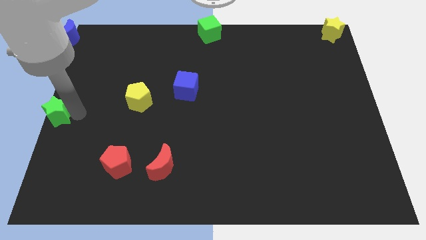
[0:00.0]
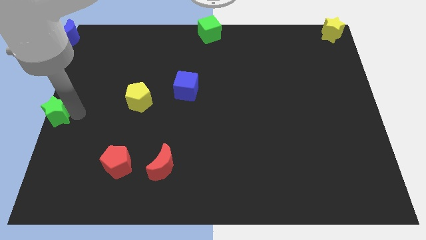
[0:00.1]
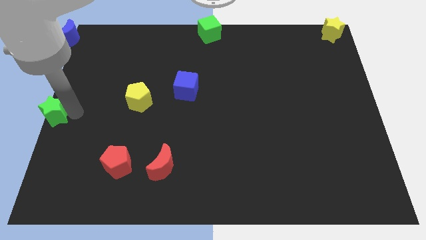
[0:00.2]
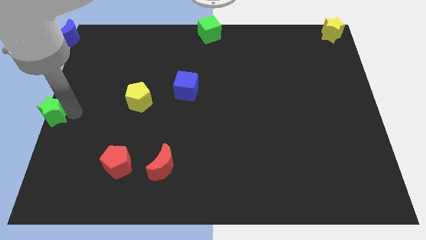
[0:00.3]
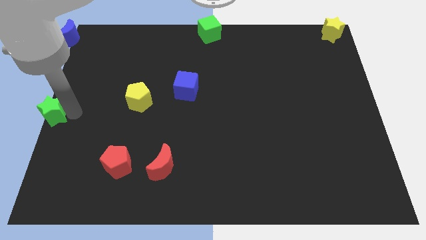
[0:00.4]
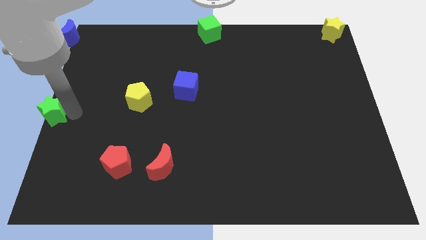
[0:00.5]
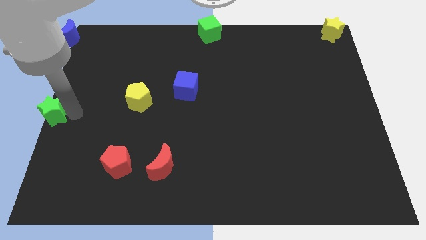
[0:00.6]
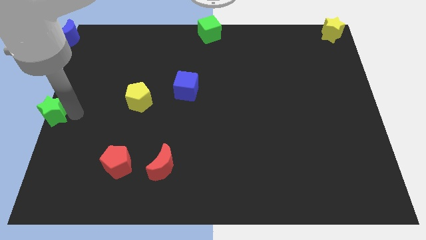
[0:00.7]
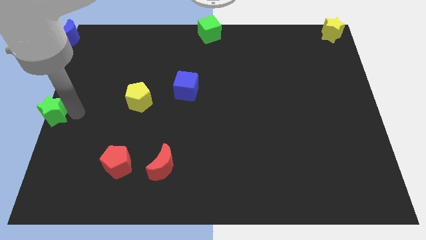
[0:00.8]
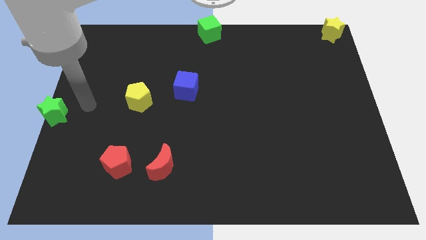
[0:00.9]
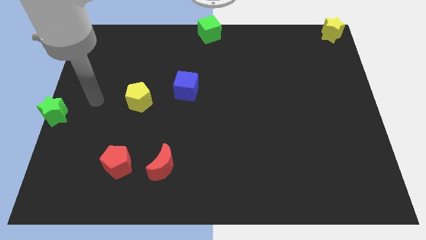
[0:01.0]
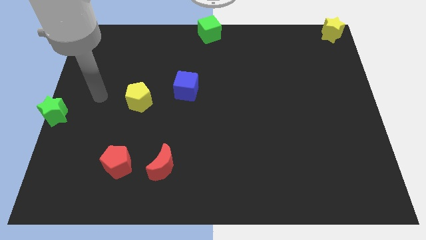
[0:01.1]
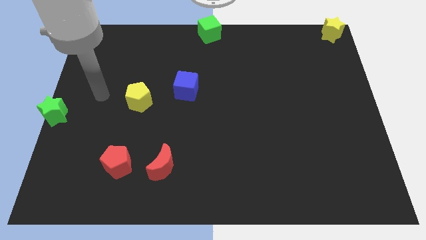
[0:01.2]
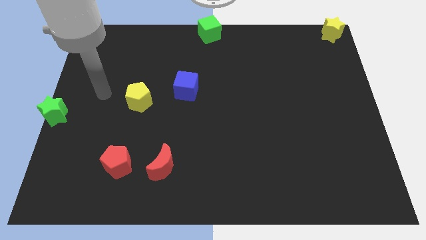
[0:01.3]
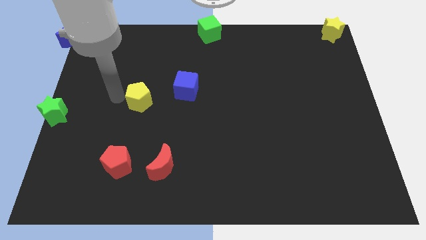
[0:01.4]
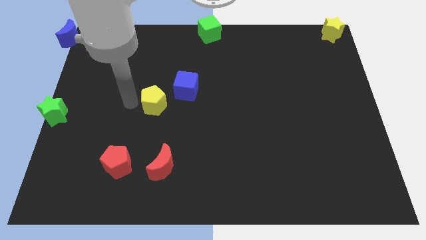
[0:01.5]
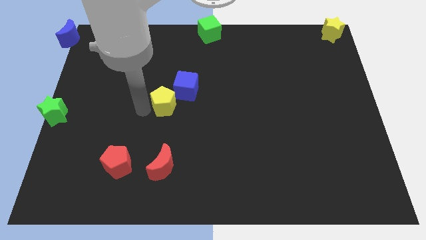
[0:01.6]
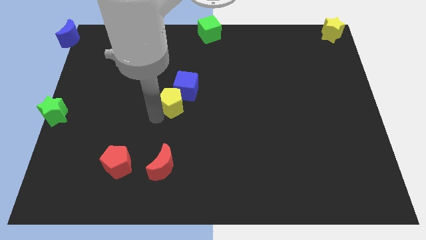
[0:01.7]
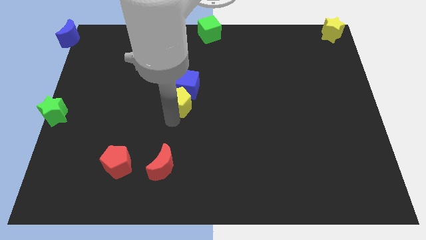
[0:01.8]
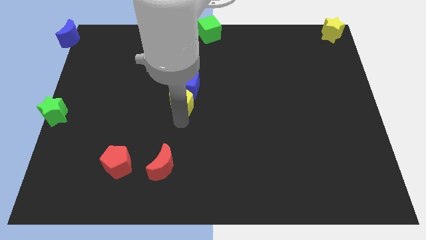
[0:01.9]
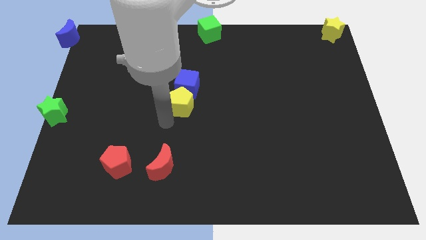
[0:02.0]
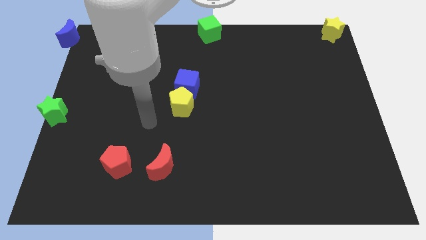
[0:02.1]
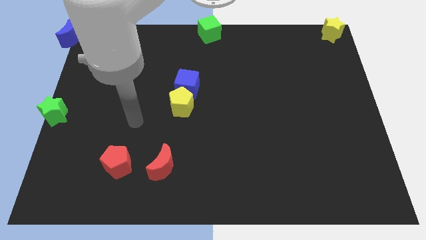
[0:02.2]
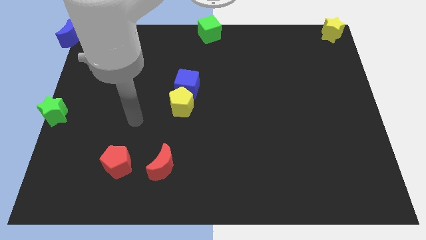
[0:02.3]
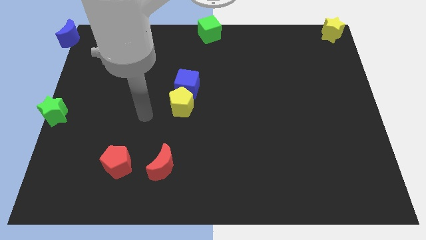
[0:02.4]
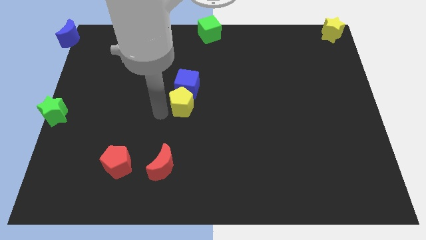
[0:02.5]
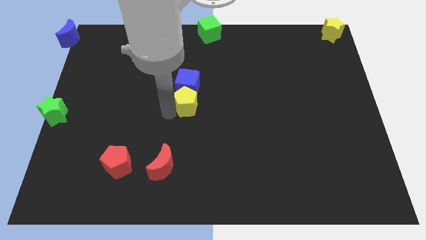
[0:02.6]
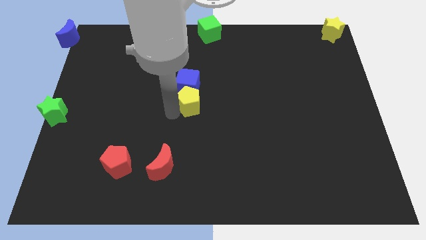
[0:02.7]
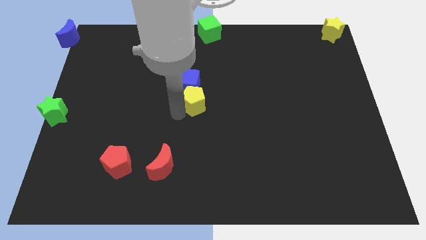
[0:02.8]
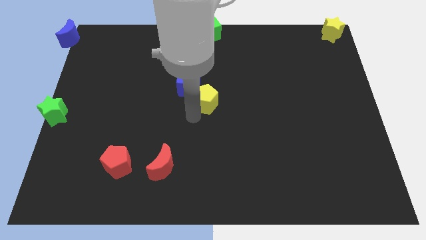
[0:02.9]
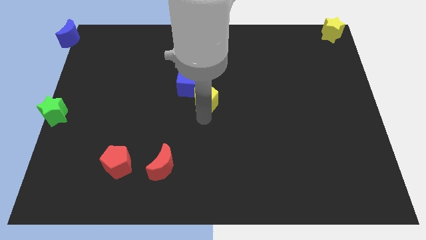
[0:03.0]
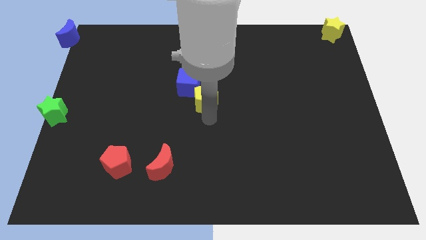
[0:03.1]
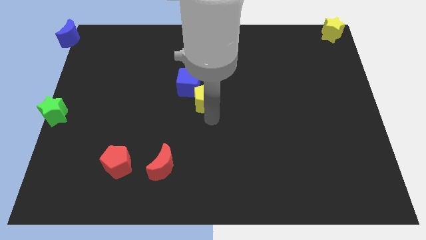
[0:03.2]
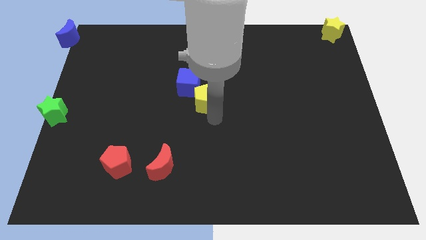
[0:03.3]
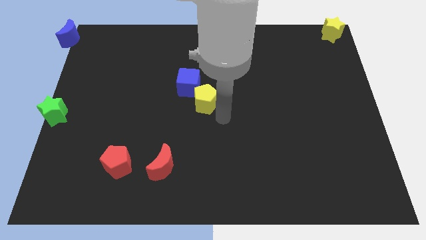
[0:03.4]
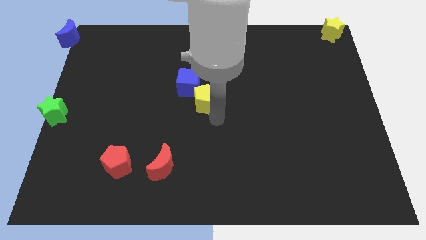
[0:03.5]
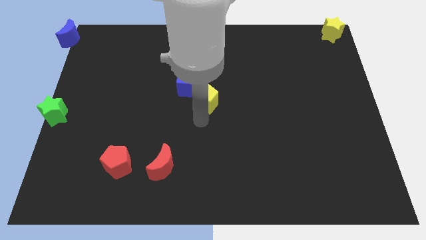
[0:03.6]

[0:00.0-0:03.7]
place yellow pentagon to the bottom of the blue cube

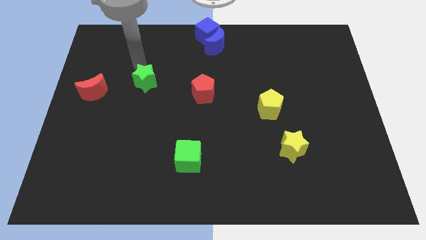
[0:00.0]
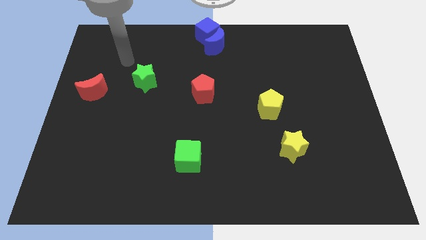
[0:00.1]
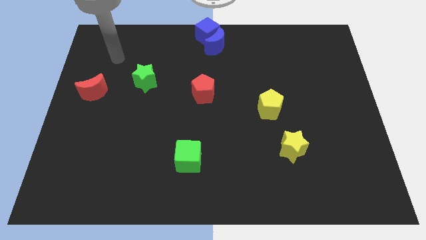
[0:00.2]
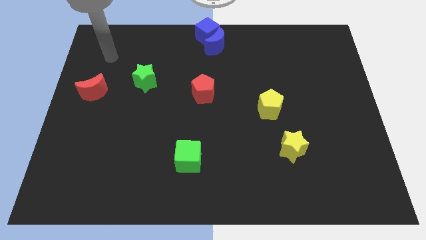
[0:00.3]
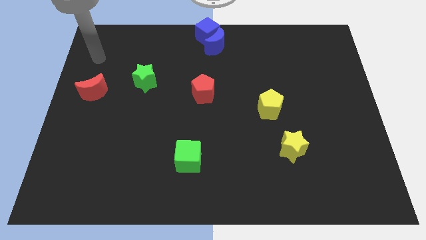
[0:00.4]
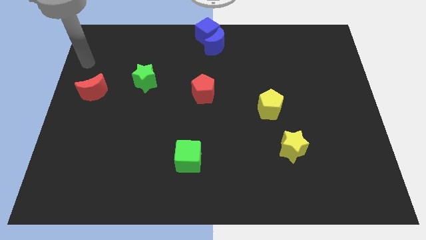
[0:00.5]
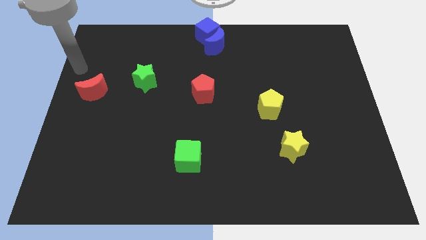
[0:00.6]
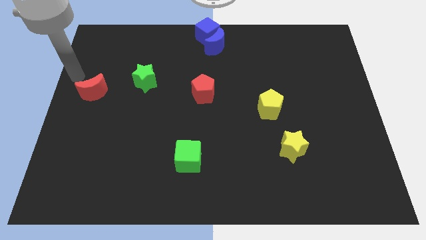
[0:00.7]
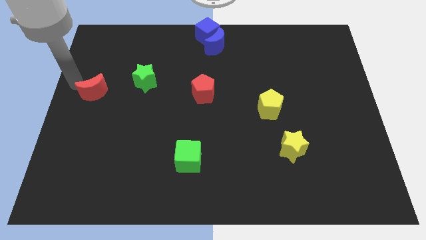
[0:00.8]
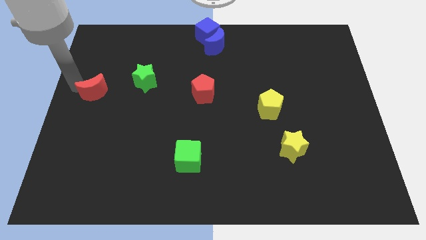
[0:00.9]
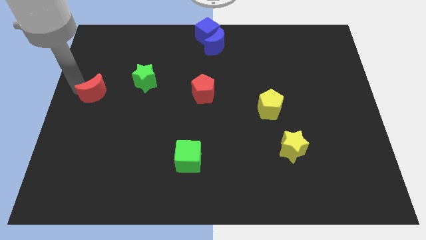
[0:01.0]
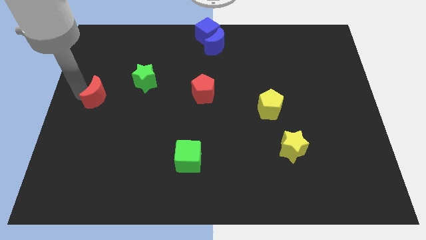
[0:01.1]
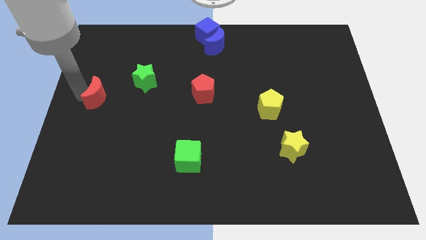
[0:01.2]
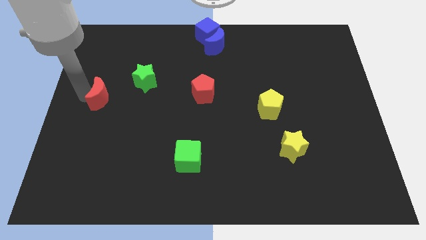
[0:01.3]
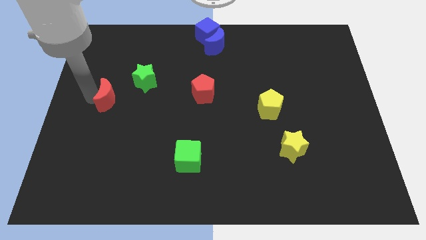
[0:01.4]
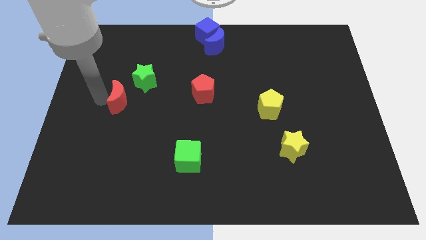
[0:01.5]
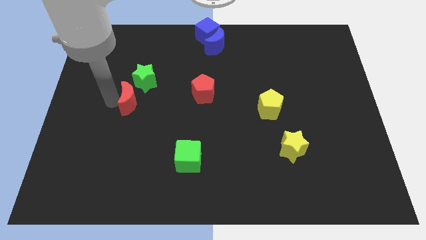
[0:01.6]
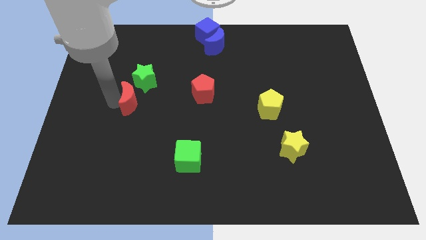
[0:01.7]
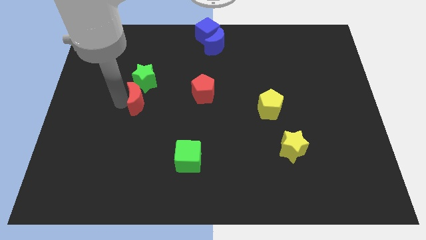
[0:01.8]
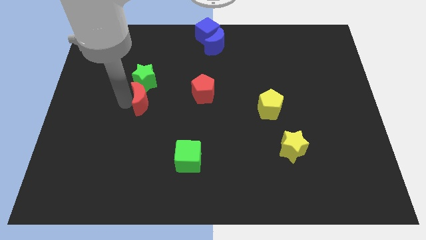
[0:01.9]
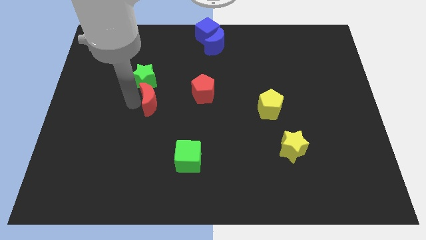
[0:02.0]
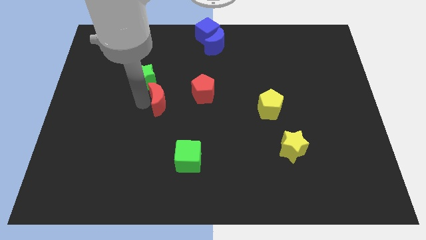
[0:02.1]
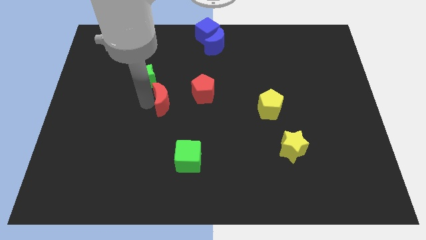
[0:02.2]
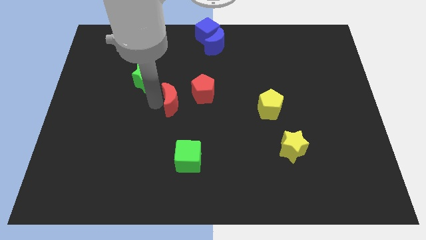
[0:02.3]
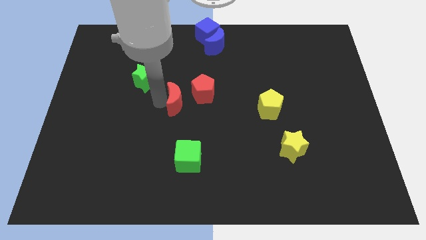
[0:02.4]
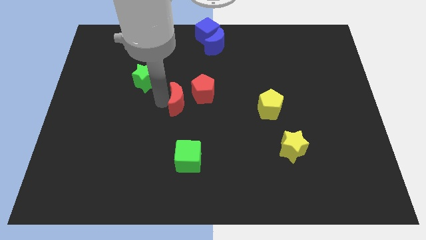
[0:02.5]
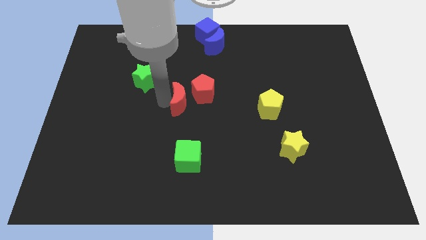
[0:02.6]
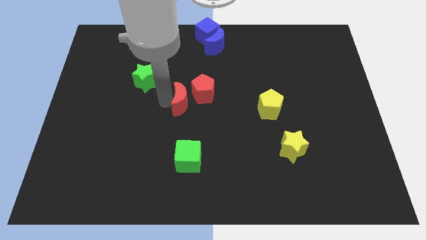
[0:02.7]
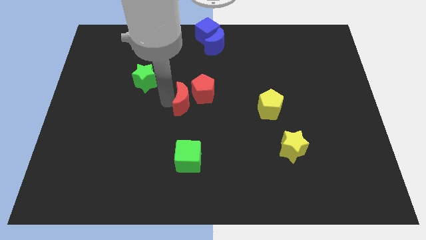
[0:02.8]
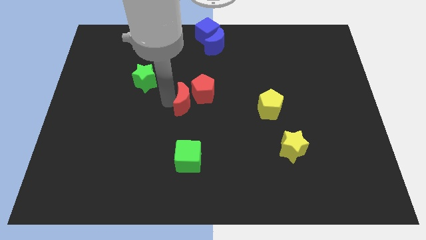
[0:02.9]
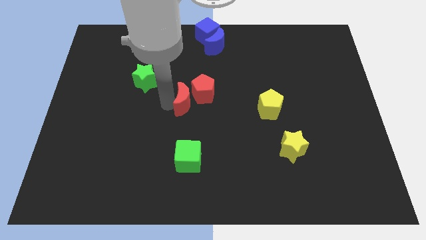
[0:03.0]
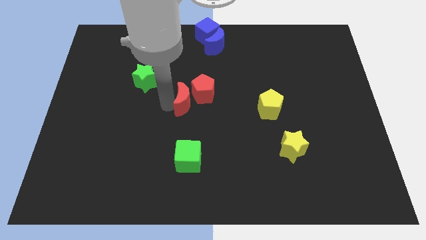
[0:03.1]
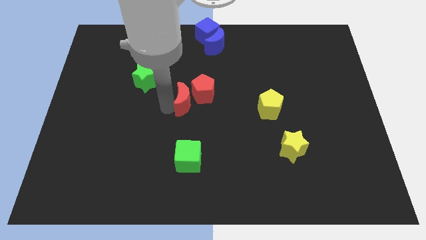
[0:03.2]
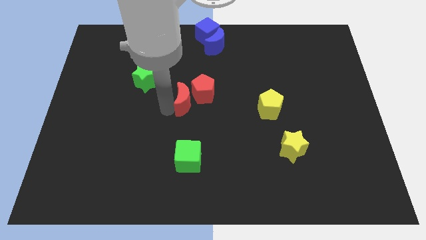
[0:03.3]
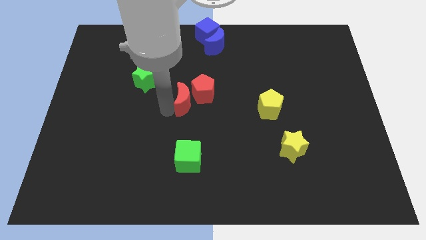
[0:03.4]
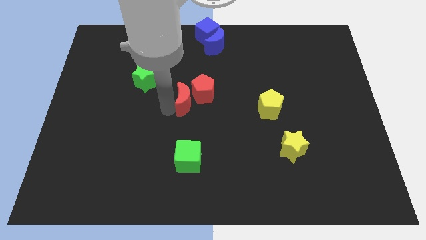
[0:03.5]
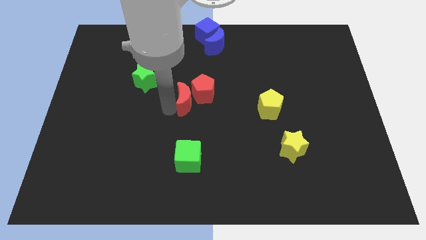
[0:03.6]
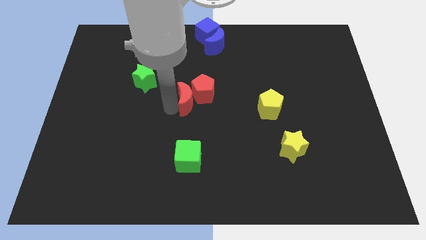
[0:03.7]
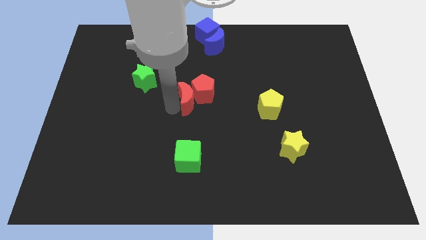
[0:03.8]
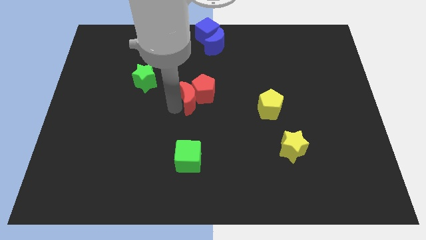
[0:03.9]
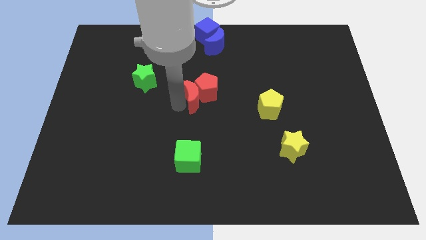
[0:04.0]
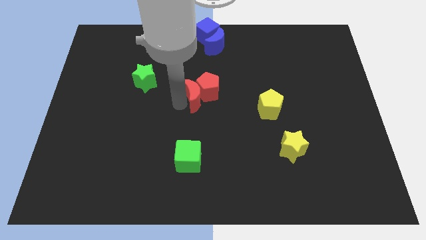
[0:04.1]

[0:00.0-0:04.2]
push the red crescent to the top of the green cube

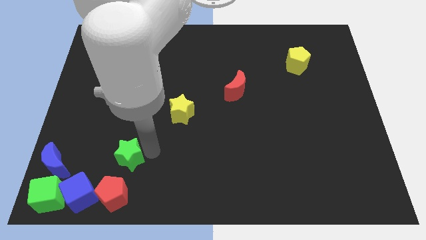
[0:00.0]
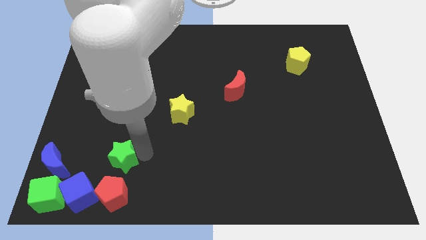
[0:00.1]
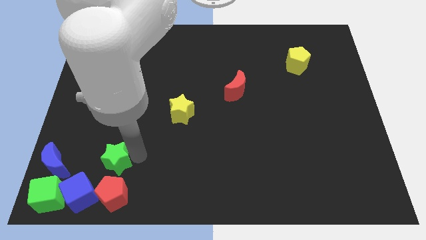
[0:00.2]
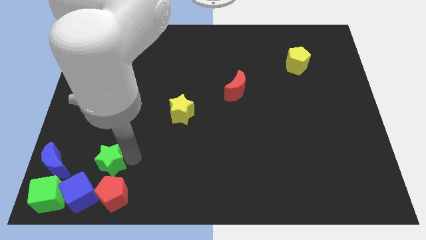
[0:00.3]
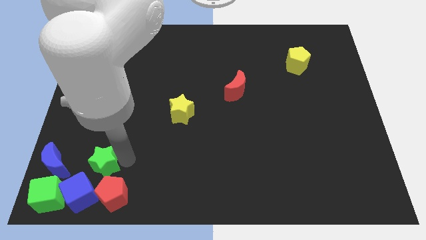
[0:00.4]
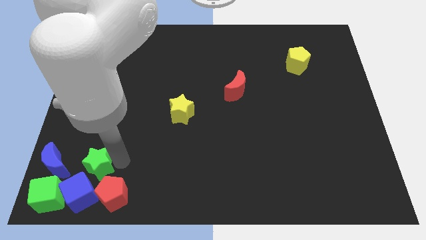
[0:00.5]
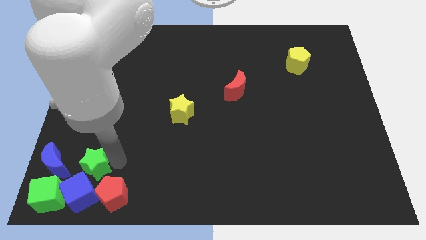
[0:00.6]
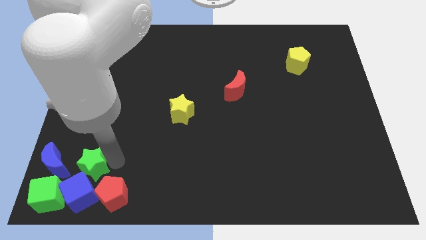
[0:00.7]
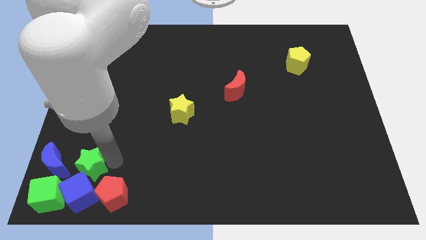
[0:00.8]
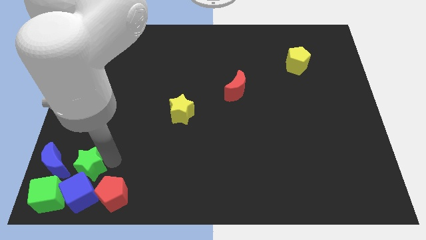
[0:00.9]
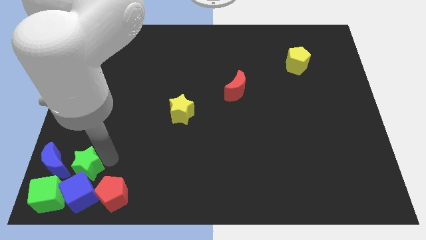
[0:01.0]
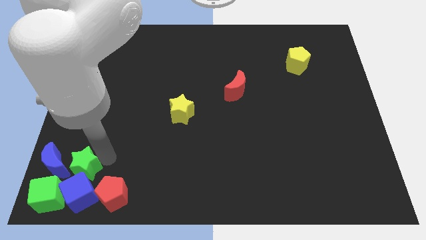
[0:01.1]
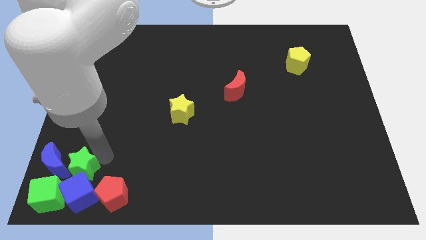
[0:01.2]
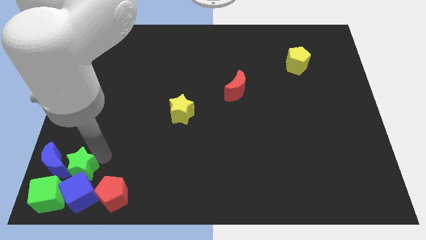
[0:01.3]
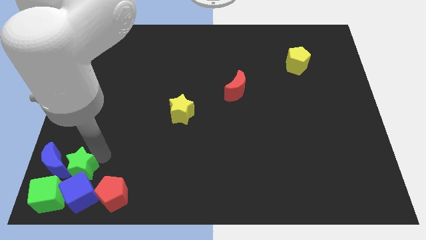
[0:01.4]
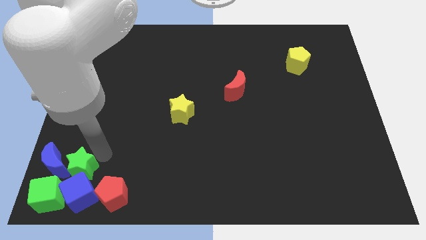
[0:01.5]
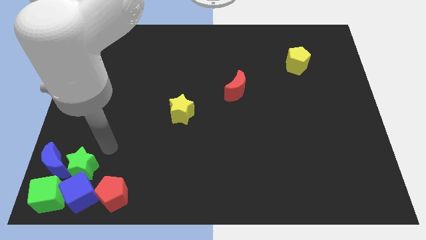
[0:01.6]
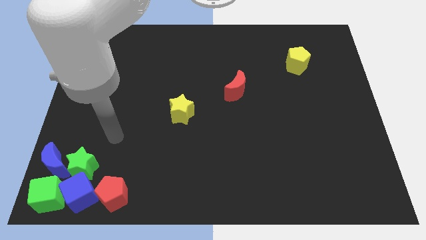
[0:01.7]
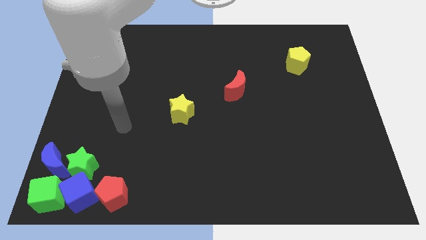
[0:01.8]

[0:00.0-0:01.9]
put the green star above the blue cube
